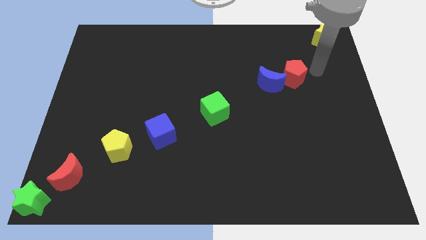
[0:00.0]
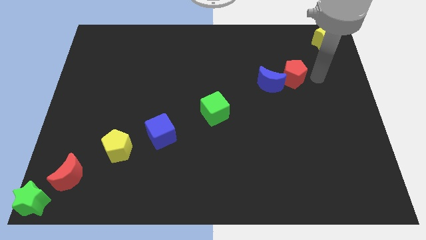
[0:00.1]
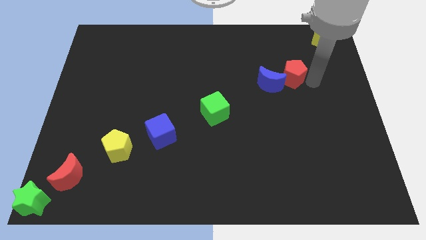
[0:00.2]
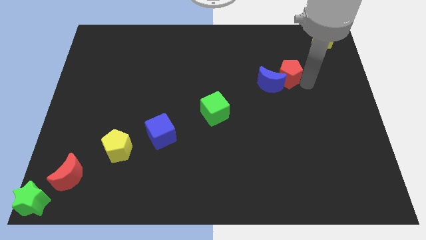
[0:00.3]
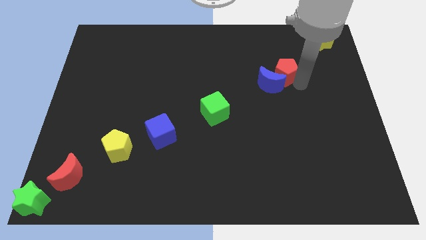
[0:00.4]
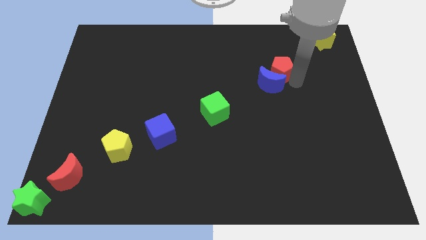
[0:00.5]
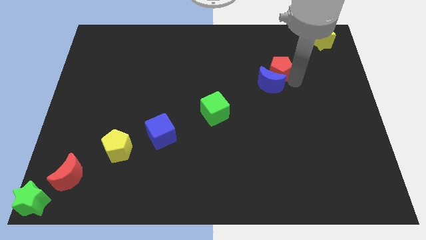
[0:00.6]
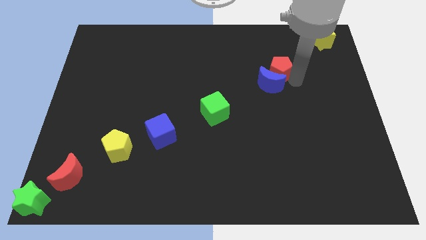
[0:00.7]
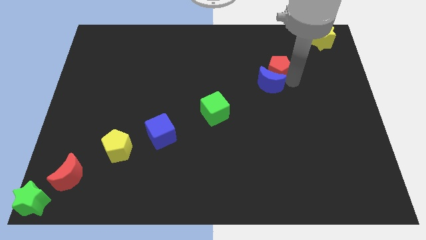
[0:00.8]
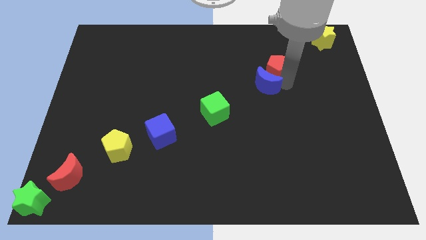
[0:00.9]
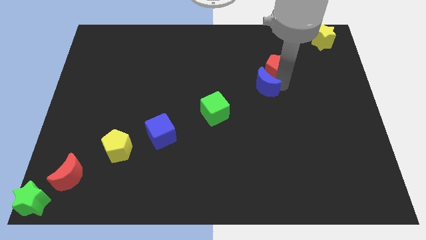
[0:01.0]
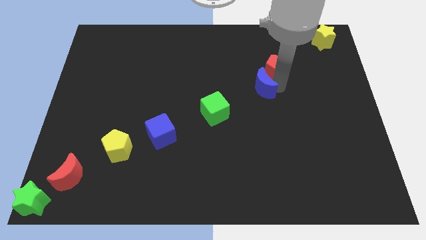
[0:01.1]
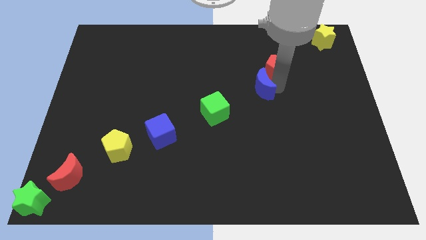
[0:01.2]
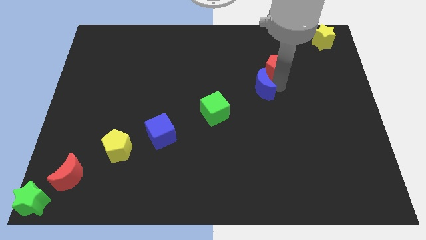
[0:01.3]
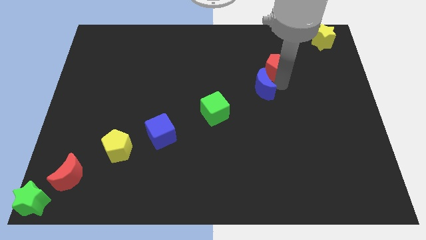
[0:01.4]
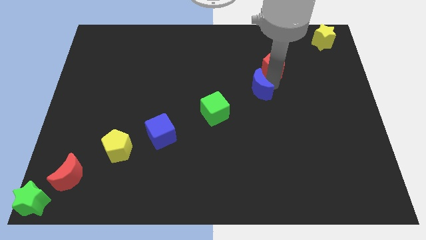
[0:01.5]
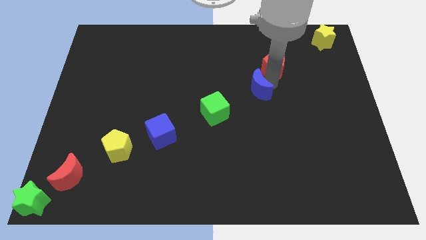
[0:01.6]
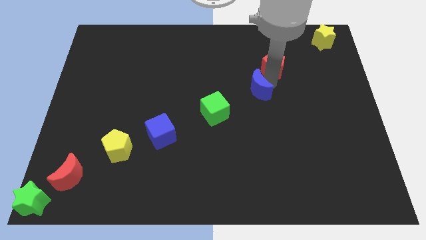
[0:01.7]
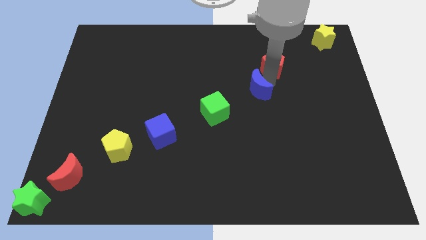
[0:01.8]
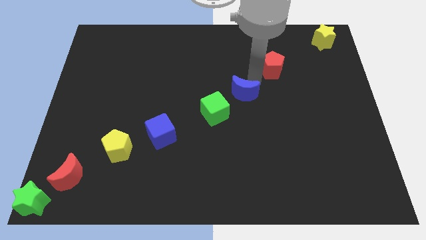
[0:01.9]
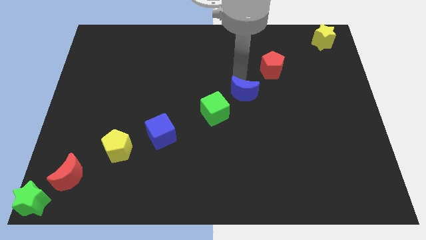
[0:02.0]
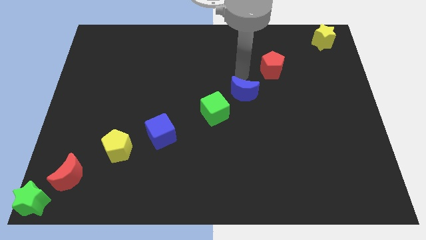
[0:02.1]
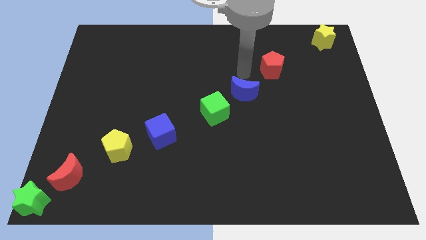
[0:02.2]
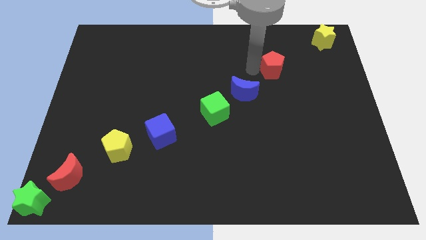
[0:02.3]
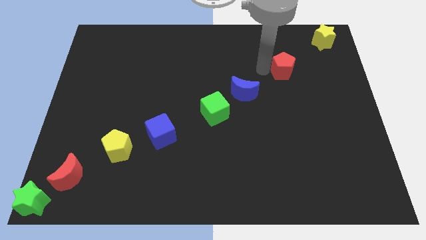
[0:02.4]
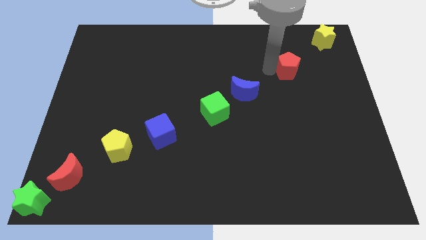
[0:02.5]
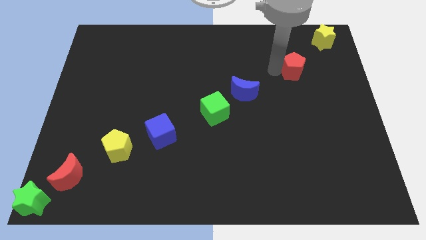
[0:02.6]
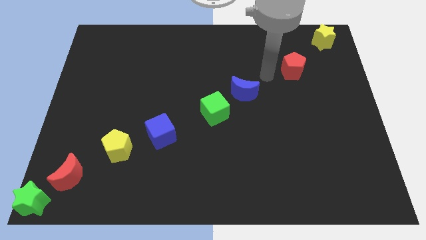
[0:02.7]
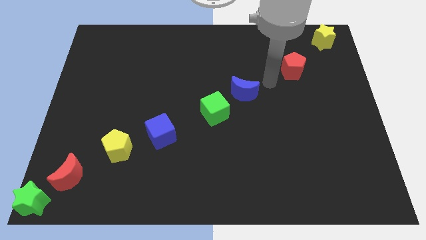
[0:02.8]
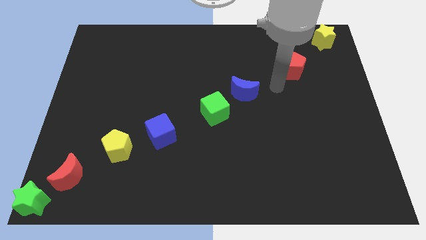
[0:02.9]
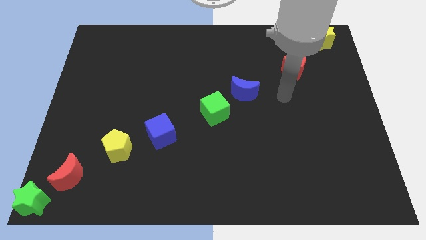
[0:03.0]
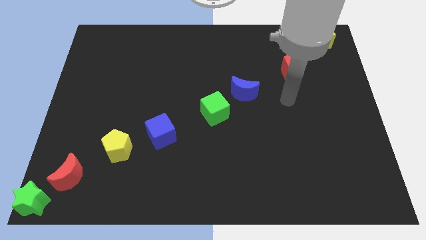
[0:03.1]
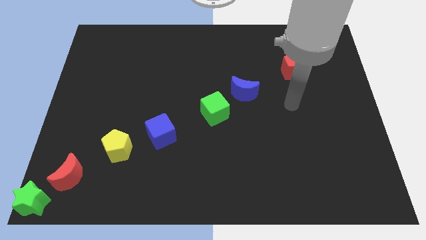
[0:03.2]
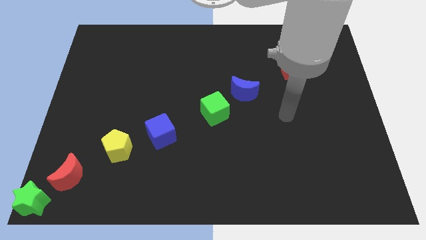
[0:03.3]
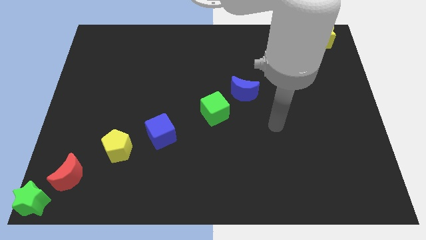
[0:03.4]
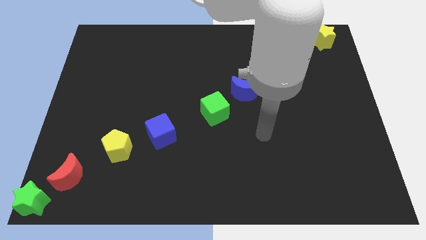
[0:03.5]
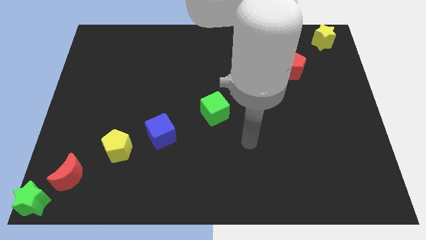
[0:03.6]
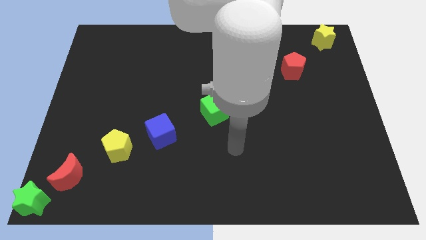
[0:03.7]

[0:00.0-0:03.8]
separate red pentagon and blue moon

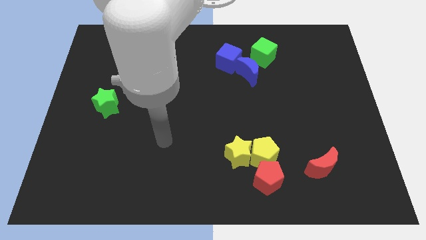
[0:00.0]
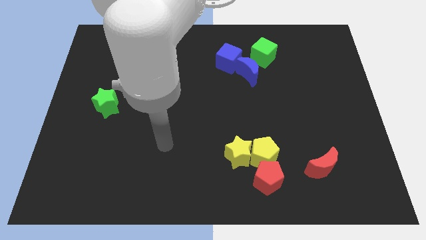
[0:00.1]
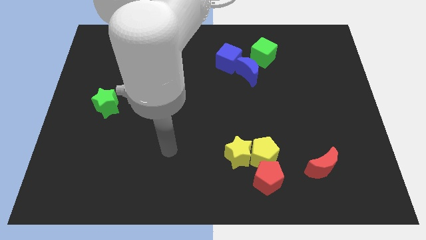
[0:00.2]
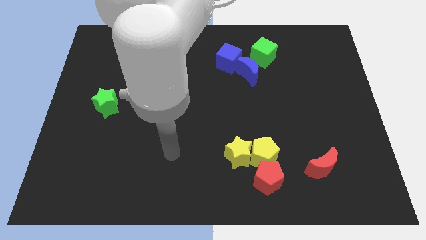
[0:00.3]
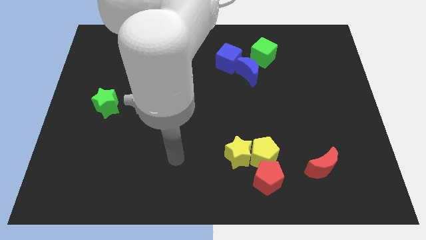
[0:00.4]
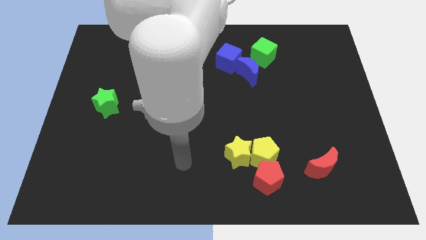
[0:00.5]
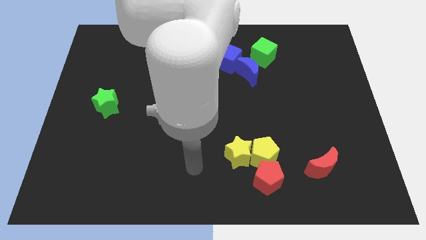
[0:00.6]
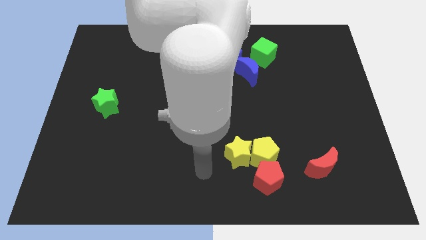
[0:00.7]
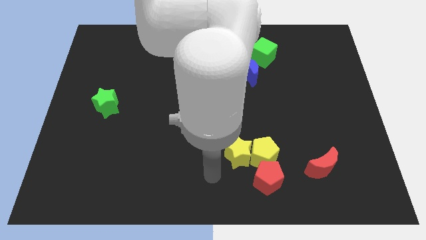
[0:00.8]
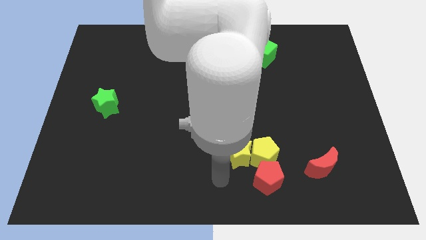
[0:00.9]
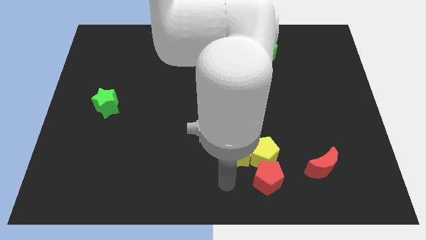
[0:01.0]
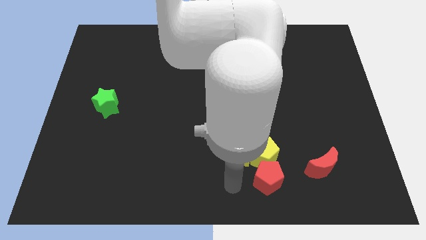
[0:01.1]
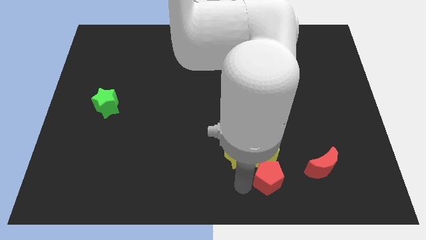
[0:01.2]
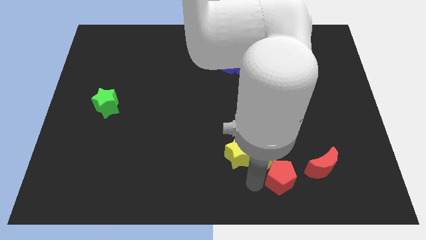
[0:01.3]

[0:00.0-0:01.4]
move the arm left to the red pentagon

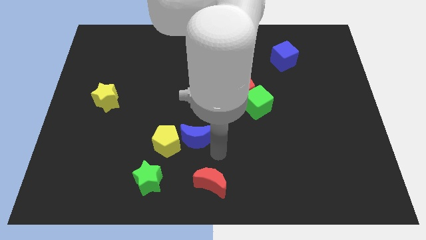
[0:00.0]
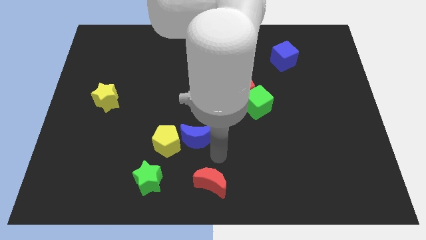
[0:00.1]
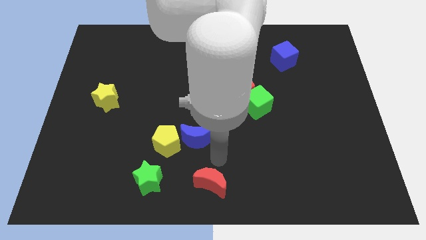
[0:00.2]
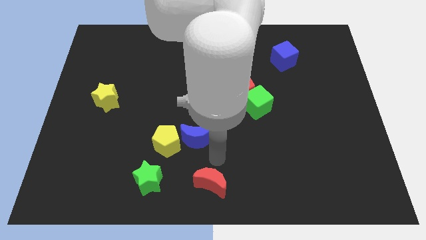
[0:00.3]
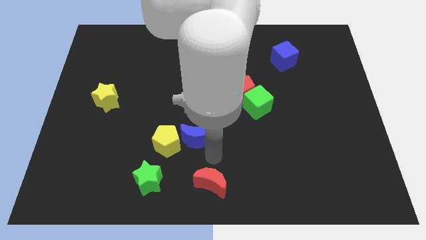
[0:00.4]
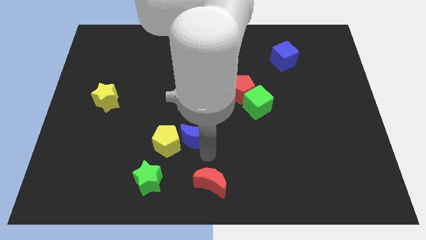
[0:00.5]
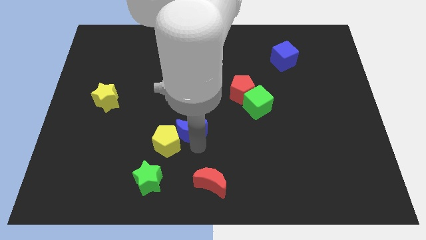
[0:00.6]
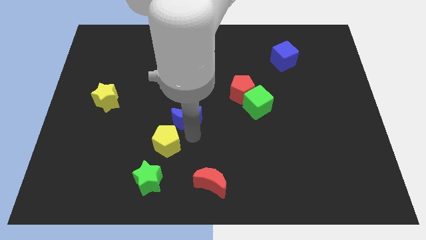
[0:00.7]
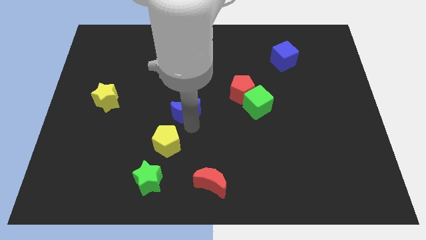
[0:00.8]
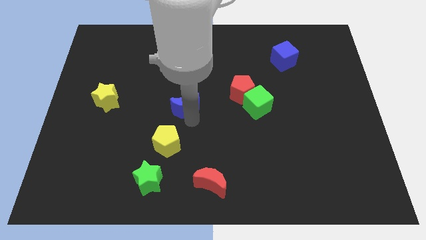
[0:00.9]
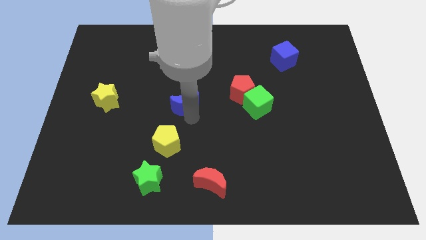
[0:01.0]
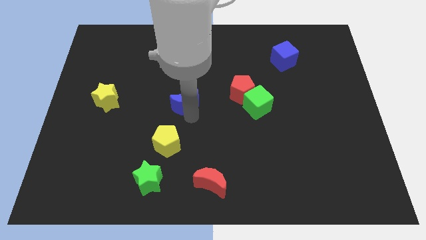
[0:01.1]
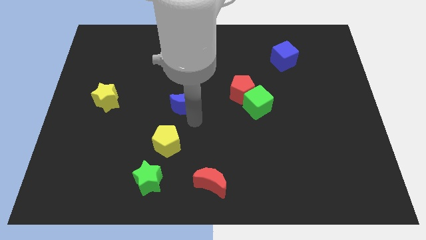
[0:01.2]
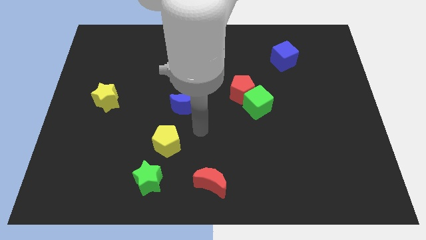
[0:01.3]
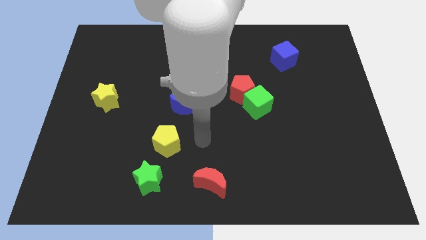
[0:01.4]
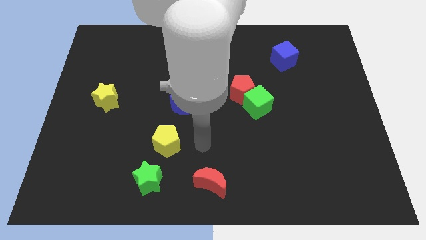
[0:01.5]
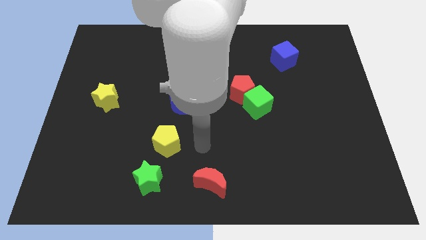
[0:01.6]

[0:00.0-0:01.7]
move the blue moon diagonally top right to the yellow pentagon

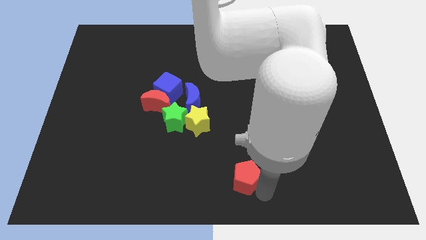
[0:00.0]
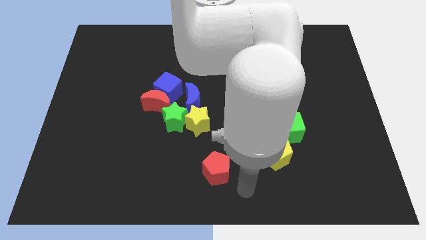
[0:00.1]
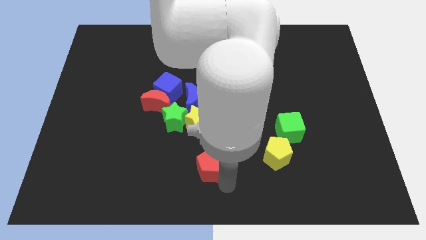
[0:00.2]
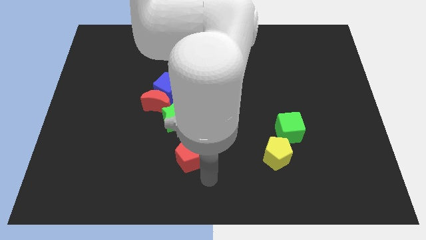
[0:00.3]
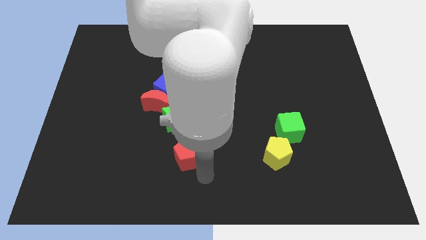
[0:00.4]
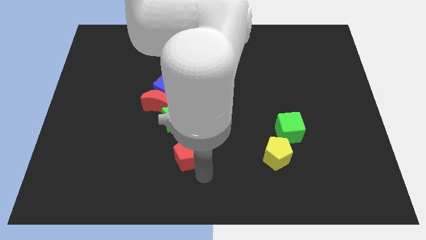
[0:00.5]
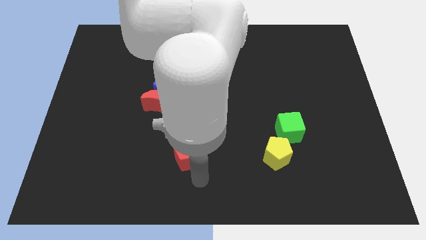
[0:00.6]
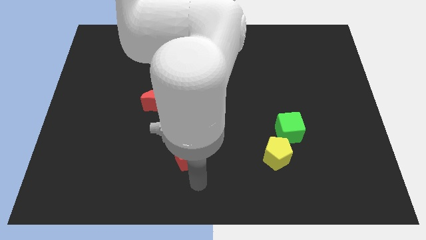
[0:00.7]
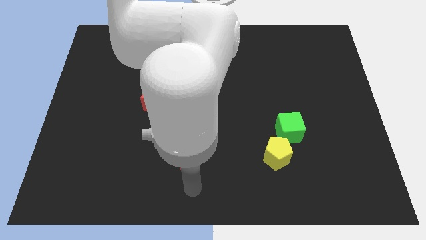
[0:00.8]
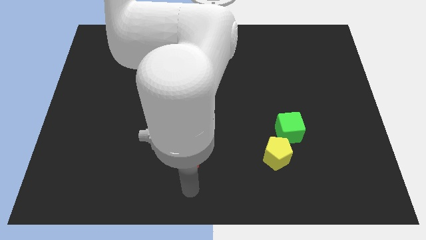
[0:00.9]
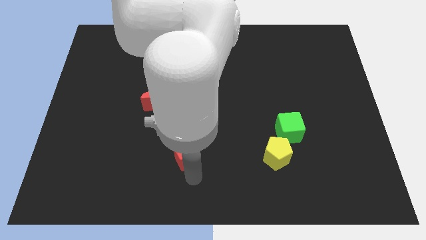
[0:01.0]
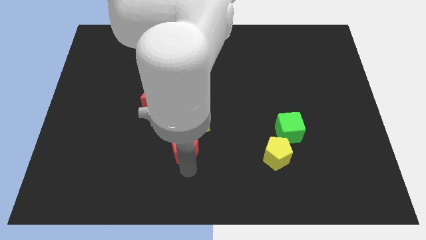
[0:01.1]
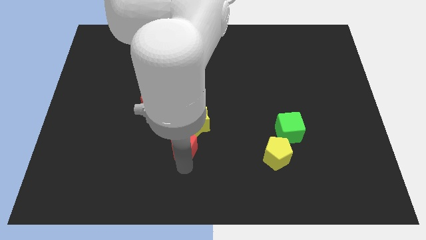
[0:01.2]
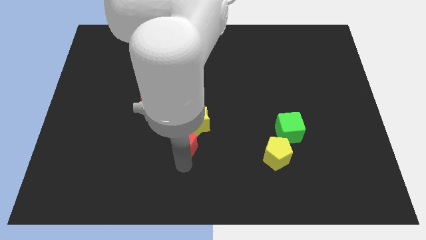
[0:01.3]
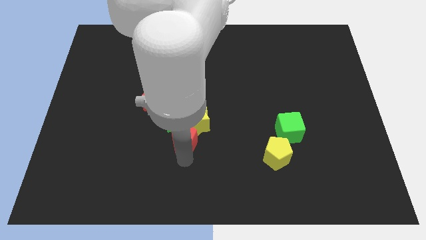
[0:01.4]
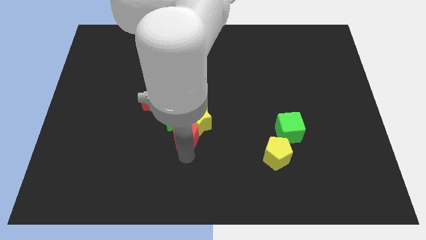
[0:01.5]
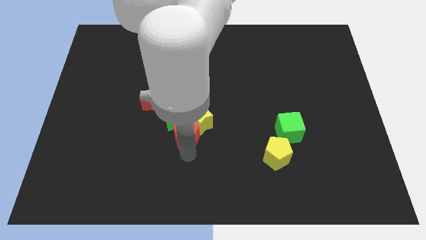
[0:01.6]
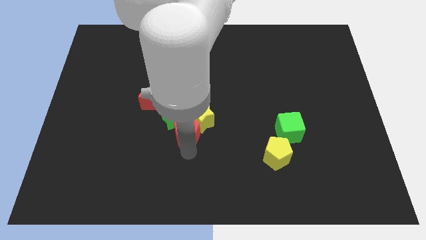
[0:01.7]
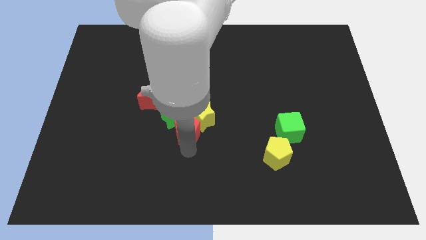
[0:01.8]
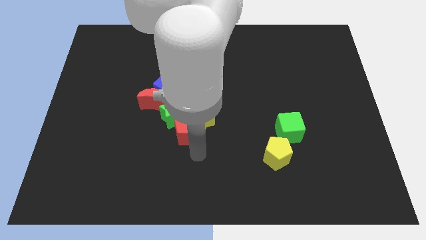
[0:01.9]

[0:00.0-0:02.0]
move the red pentagon into the group of blocks
